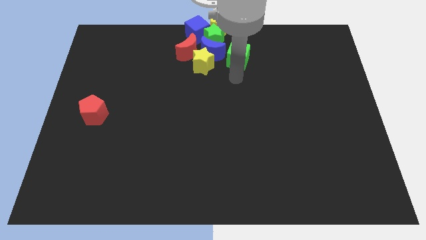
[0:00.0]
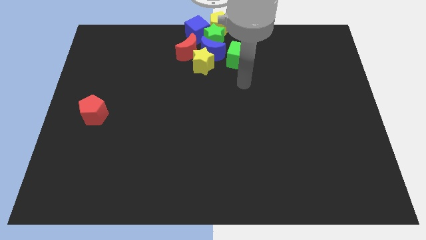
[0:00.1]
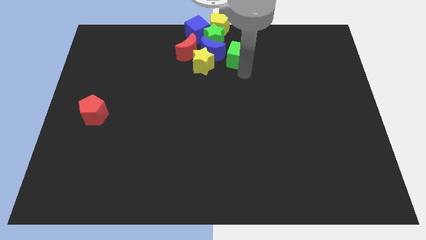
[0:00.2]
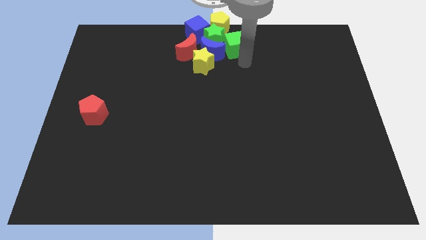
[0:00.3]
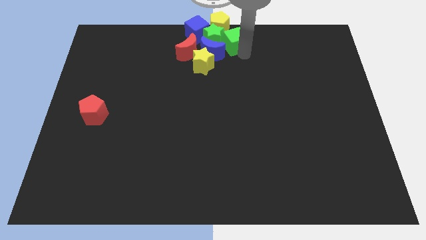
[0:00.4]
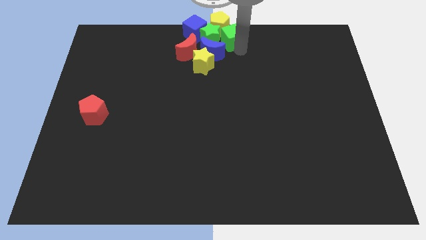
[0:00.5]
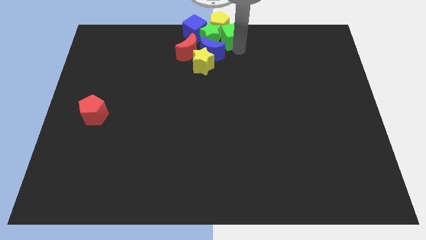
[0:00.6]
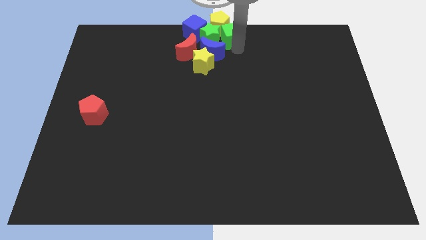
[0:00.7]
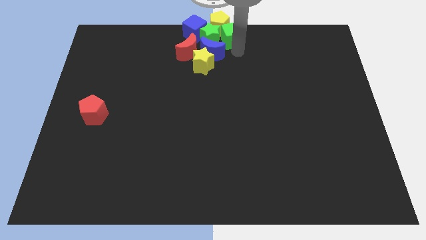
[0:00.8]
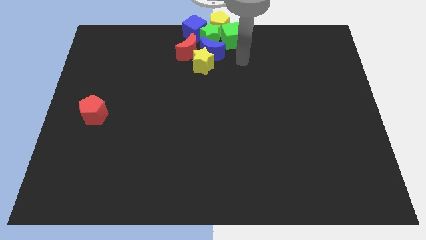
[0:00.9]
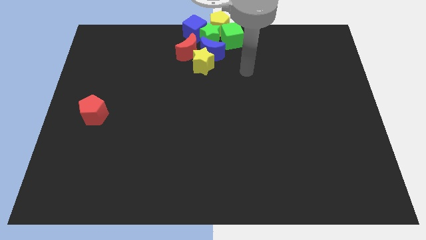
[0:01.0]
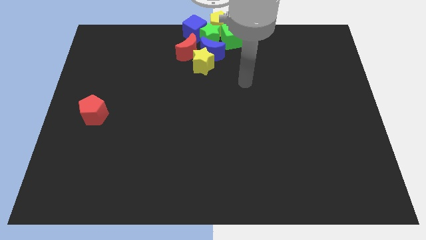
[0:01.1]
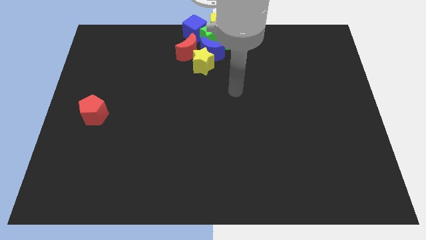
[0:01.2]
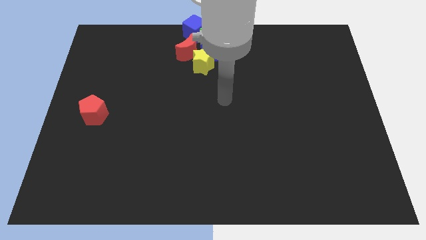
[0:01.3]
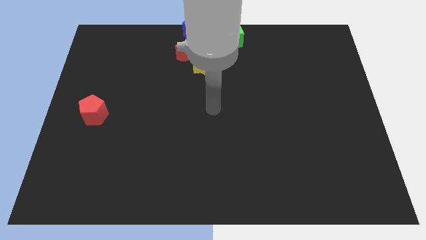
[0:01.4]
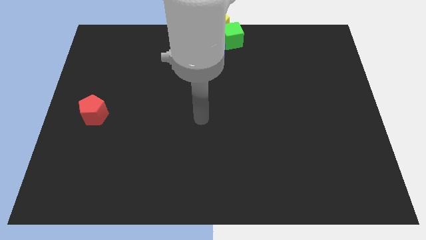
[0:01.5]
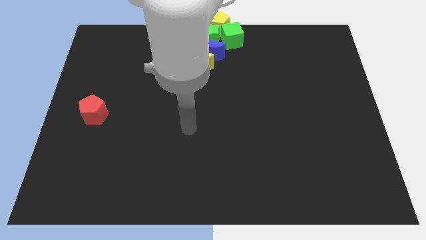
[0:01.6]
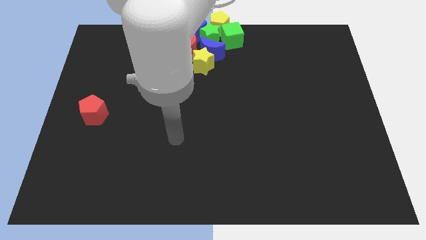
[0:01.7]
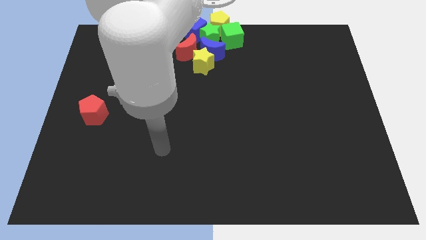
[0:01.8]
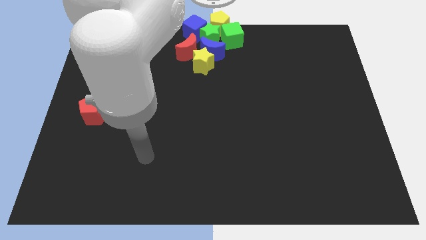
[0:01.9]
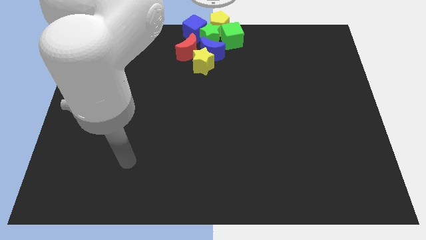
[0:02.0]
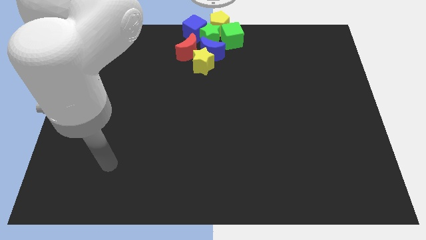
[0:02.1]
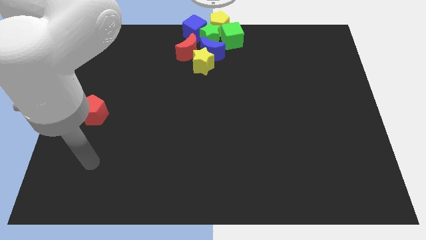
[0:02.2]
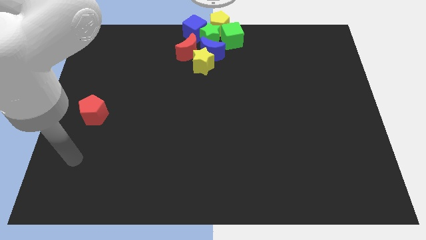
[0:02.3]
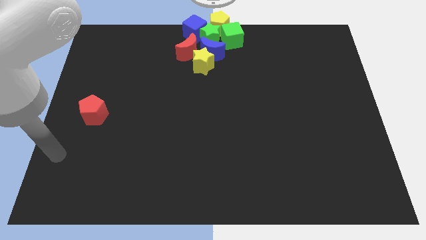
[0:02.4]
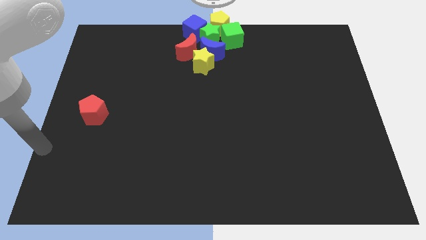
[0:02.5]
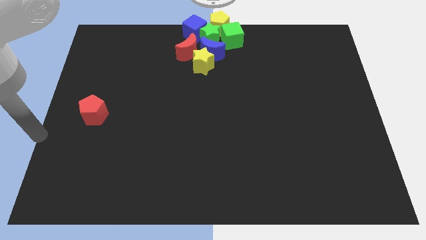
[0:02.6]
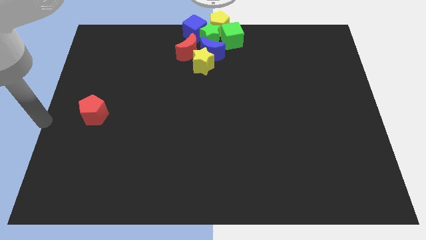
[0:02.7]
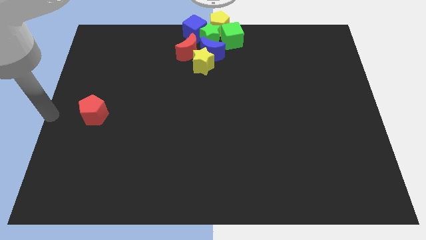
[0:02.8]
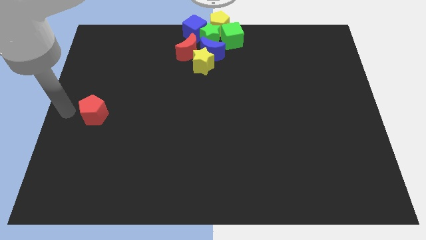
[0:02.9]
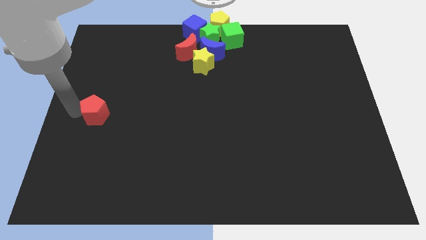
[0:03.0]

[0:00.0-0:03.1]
move your arm towards the red pentagon

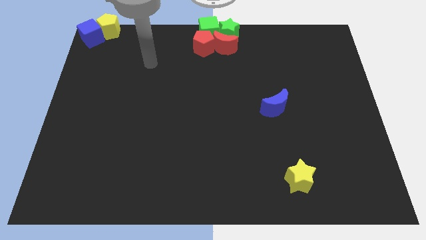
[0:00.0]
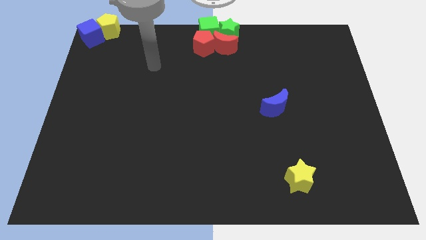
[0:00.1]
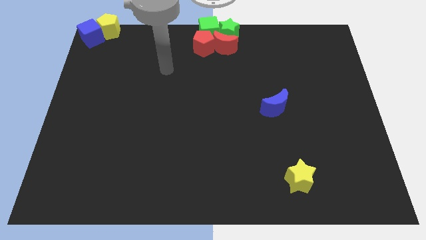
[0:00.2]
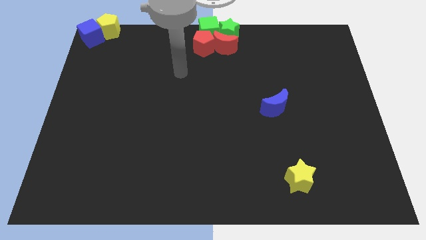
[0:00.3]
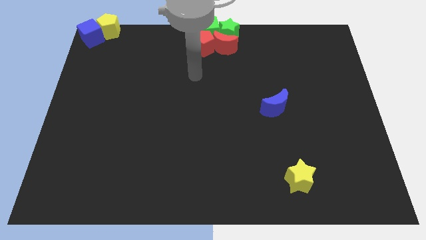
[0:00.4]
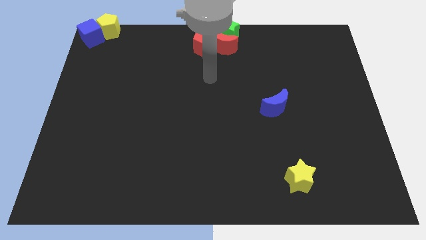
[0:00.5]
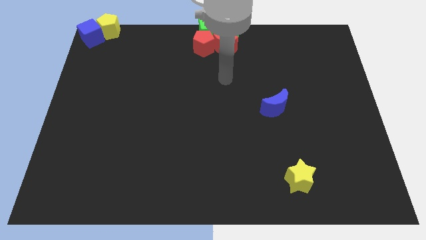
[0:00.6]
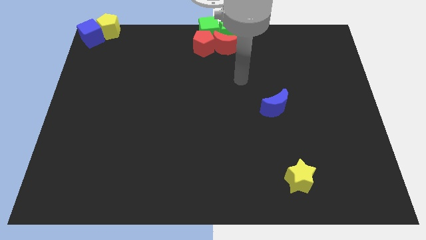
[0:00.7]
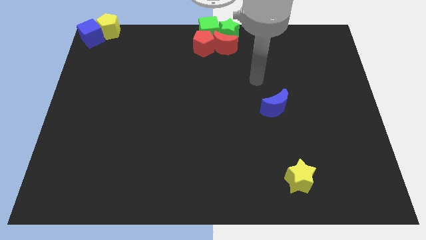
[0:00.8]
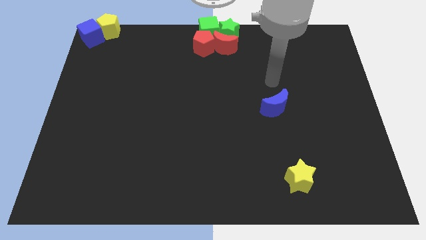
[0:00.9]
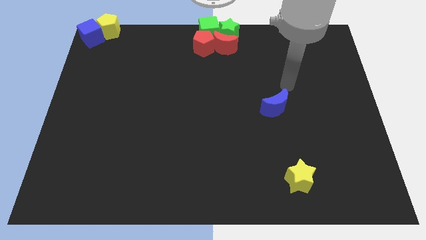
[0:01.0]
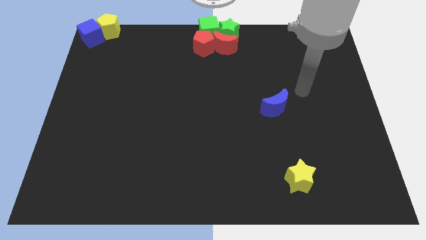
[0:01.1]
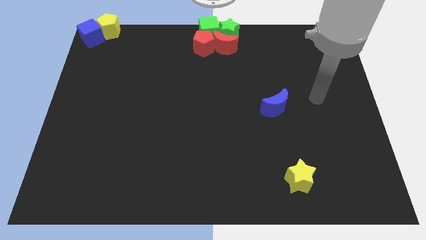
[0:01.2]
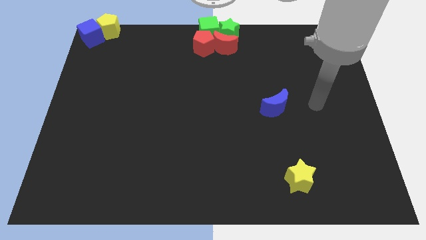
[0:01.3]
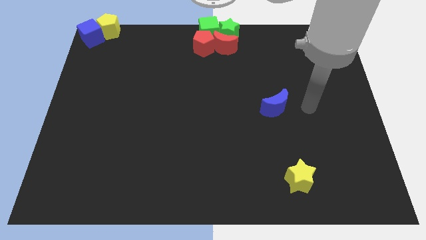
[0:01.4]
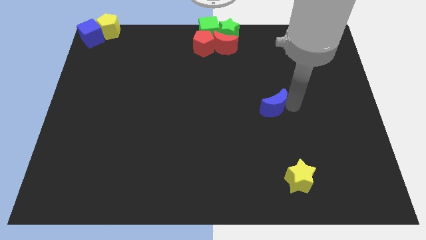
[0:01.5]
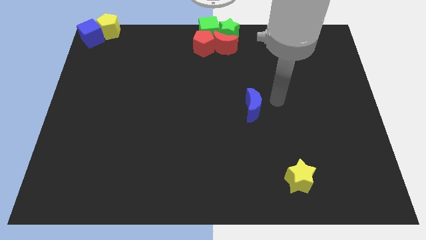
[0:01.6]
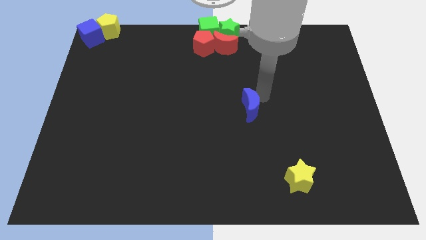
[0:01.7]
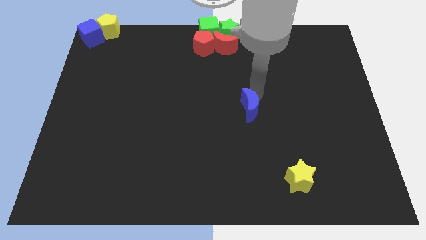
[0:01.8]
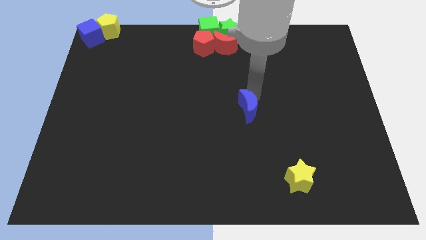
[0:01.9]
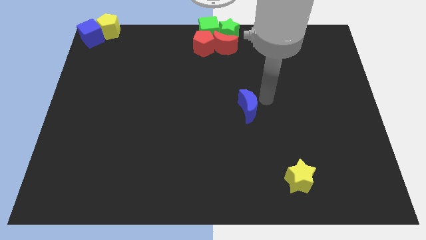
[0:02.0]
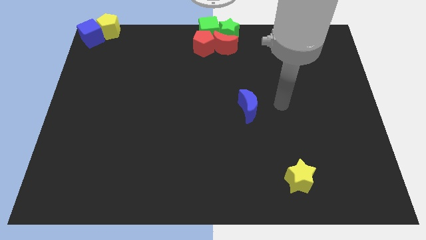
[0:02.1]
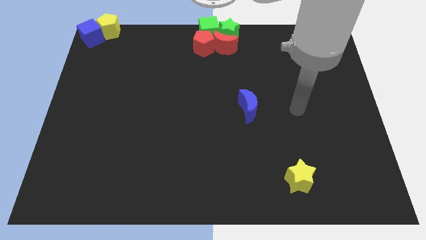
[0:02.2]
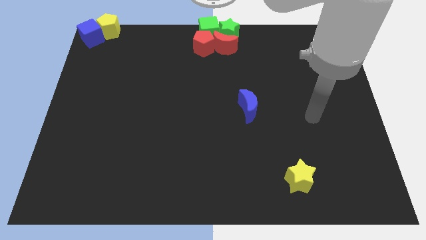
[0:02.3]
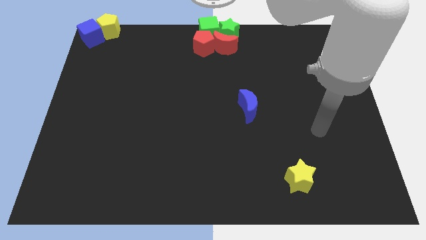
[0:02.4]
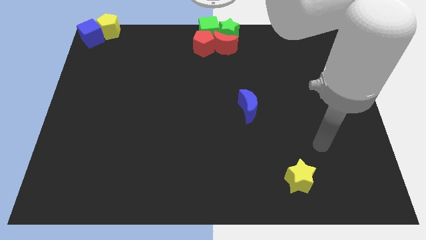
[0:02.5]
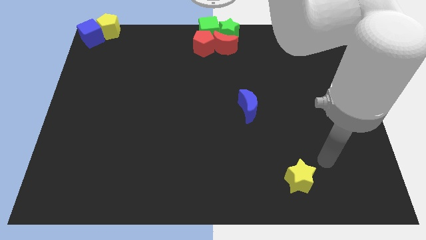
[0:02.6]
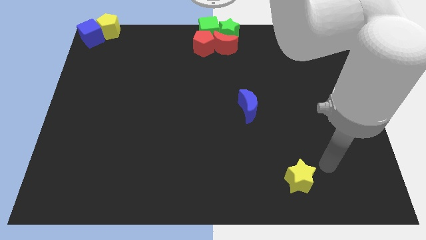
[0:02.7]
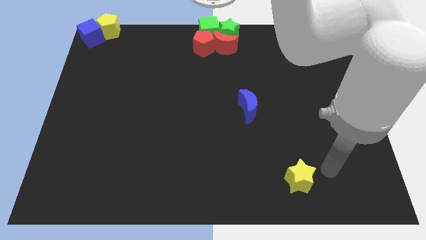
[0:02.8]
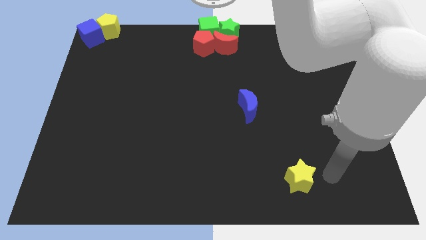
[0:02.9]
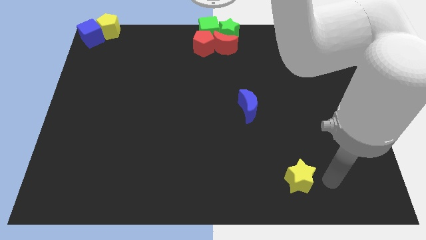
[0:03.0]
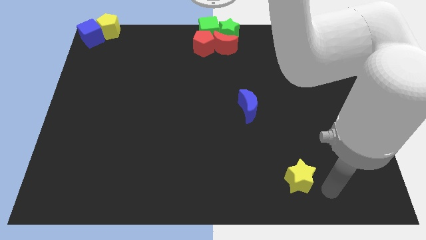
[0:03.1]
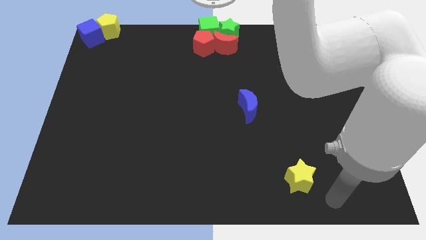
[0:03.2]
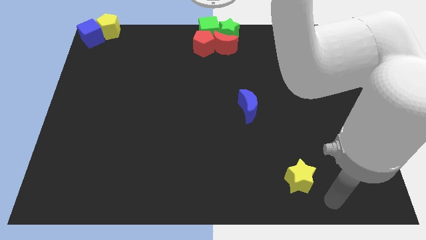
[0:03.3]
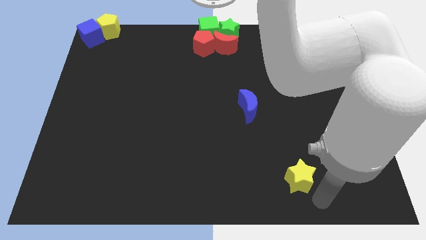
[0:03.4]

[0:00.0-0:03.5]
move your arm towards the yellow star

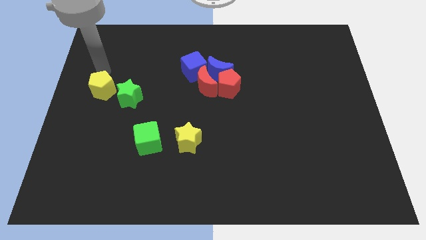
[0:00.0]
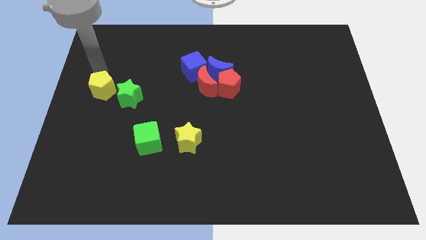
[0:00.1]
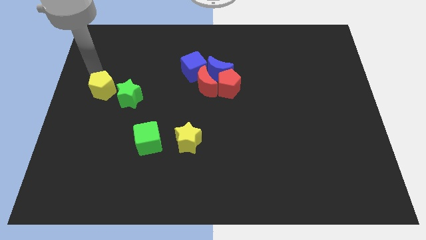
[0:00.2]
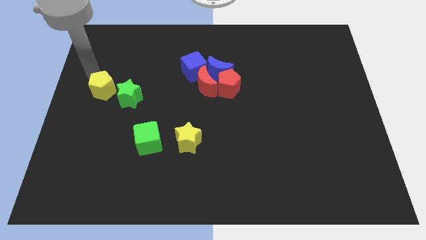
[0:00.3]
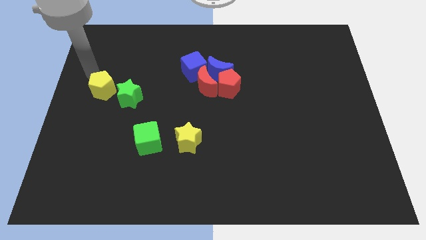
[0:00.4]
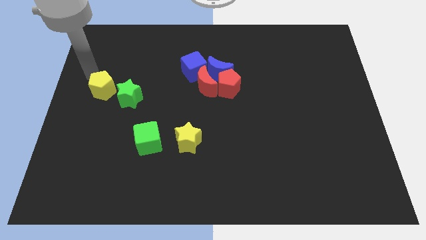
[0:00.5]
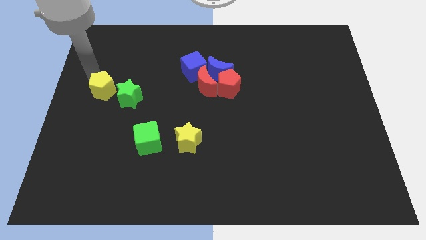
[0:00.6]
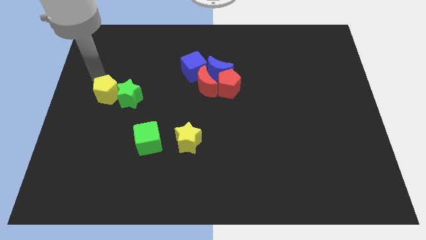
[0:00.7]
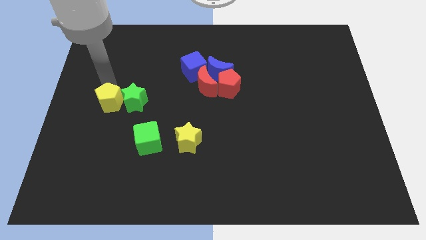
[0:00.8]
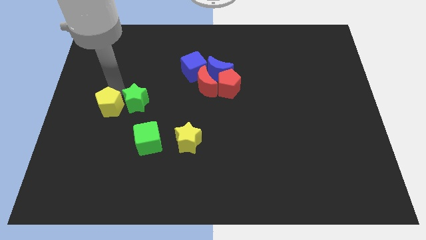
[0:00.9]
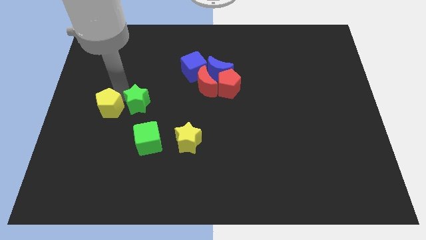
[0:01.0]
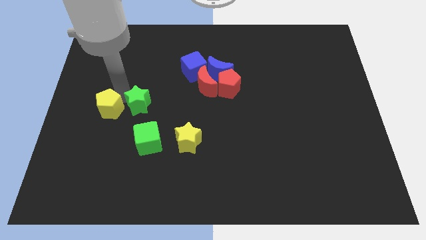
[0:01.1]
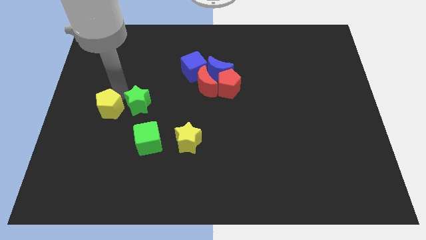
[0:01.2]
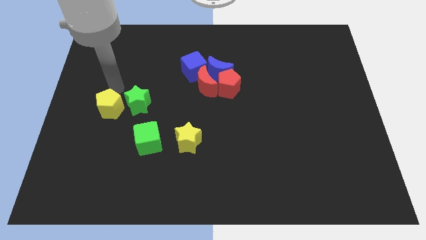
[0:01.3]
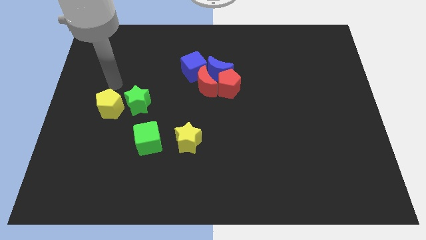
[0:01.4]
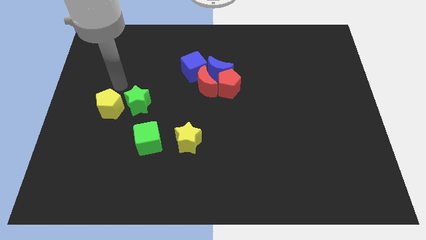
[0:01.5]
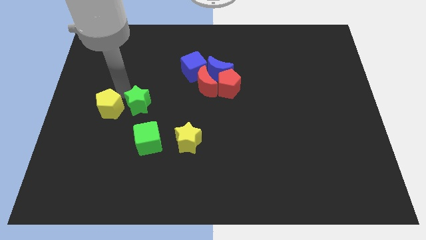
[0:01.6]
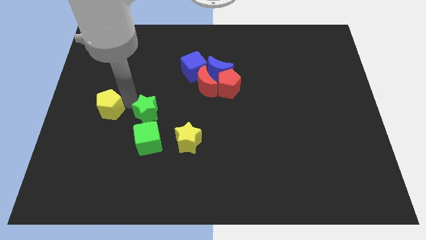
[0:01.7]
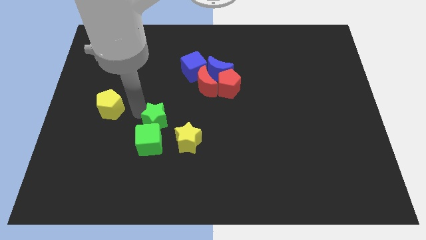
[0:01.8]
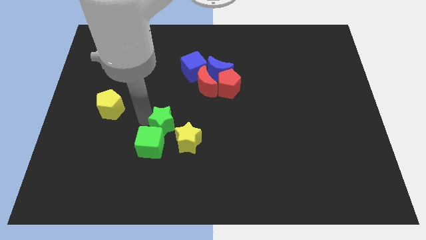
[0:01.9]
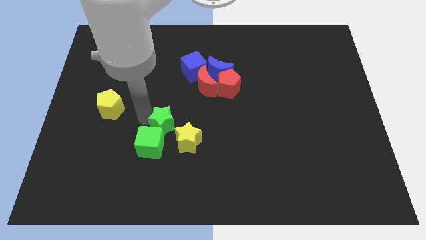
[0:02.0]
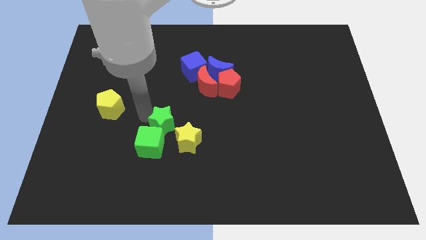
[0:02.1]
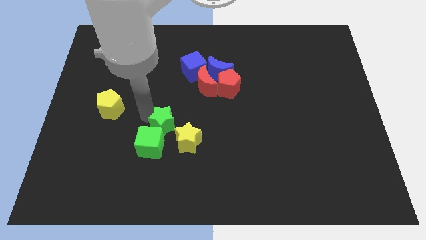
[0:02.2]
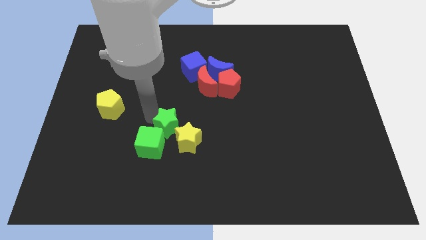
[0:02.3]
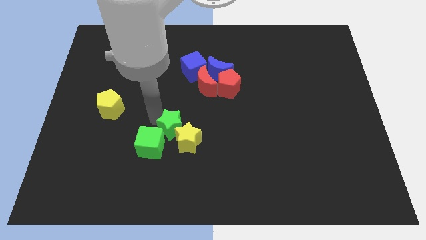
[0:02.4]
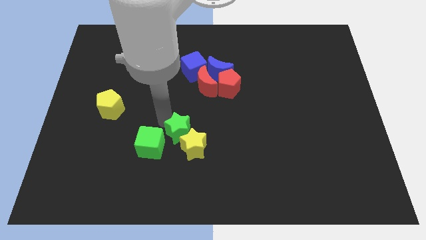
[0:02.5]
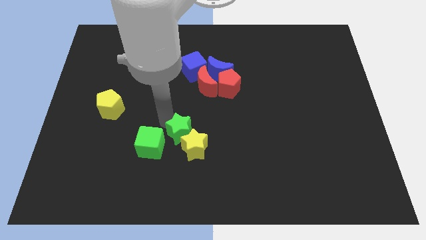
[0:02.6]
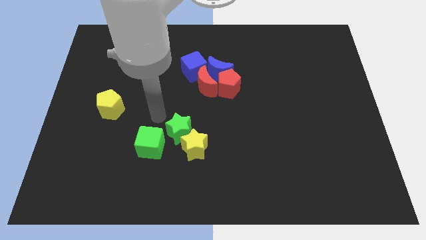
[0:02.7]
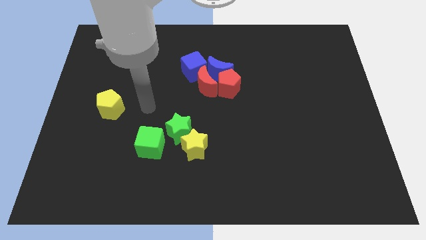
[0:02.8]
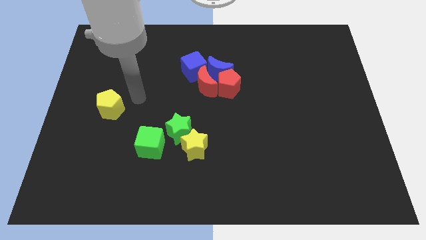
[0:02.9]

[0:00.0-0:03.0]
push the green star into the yellow star
